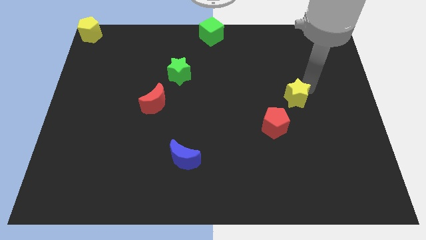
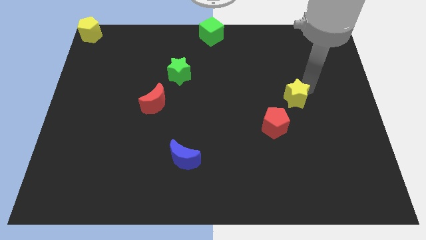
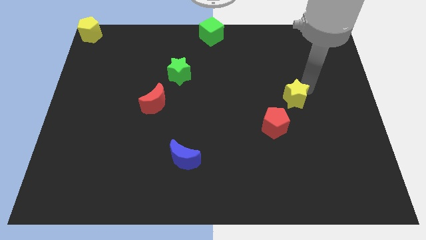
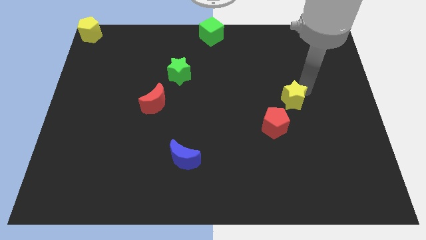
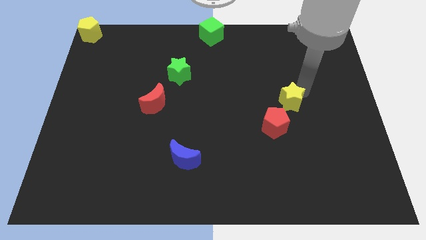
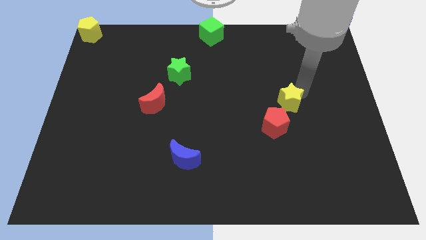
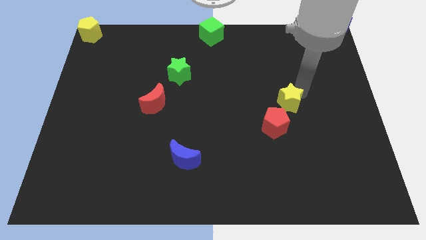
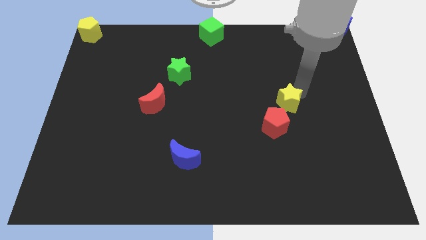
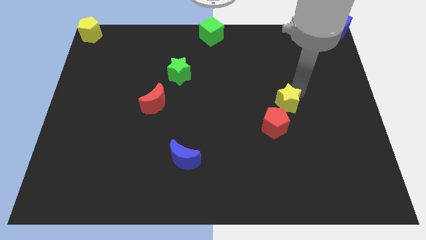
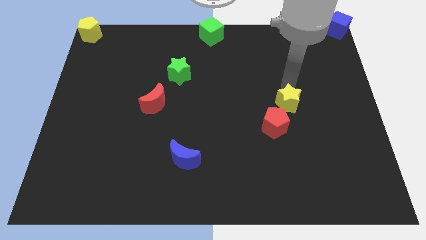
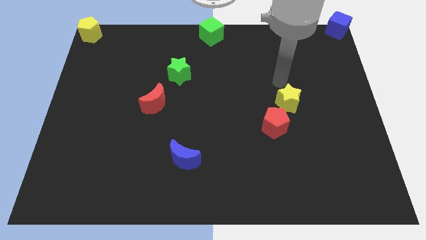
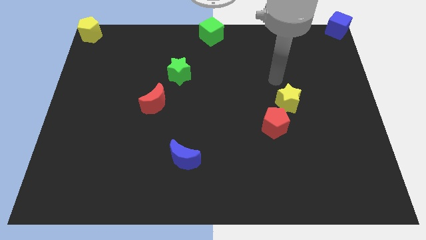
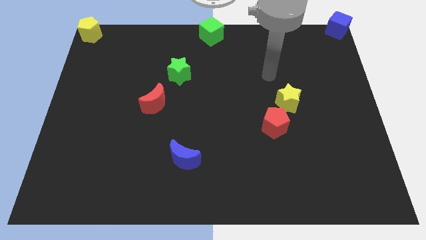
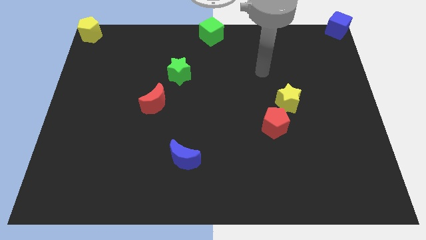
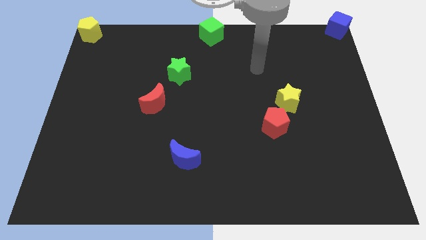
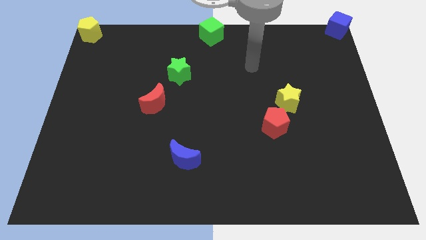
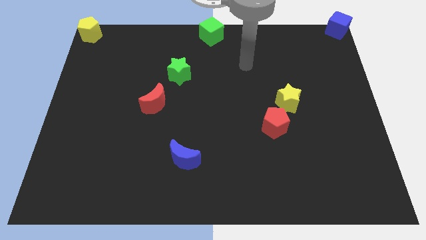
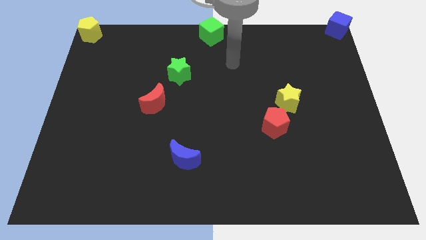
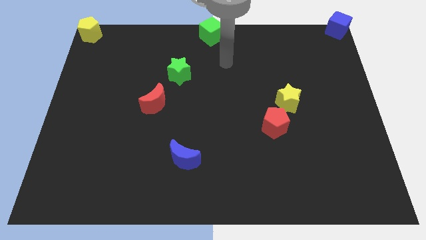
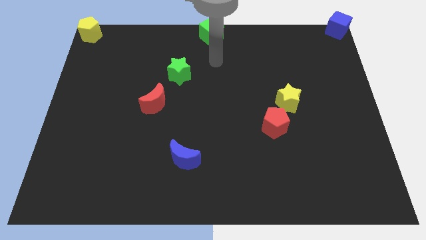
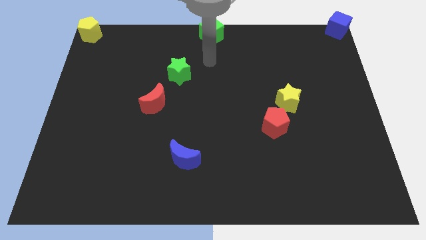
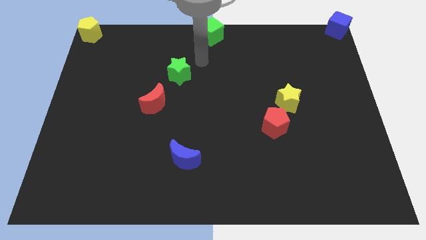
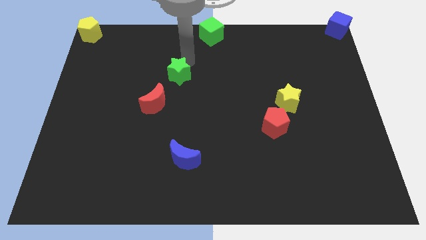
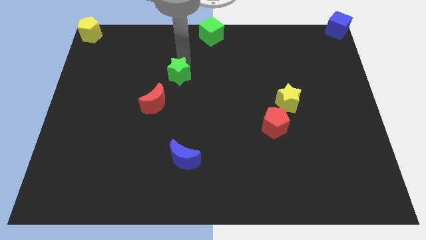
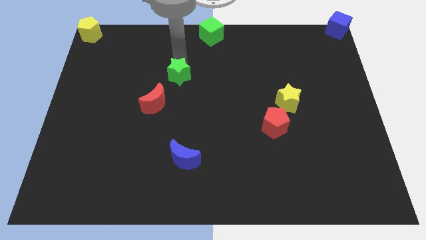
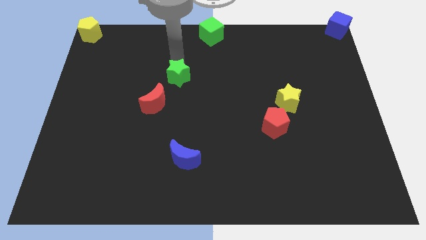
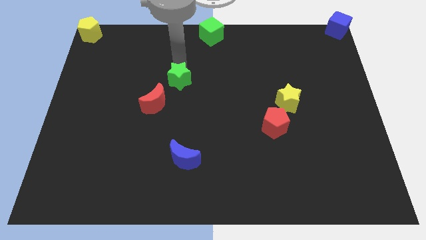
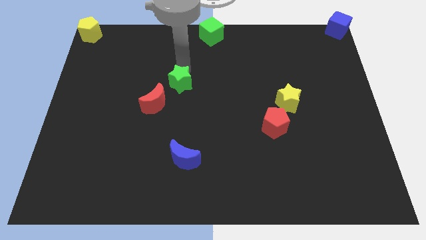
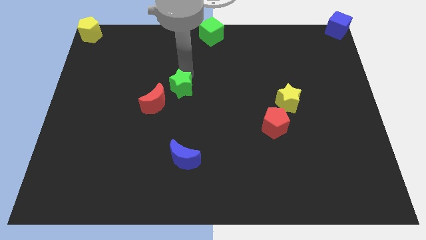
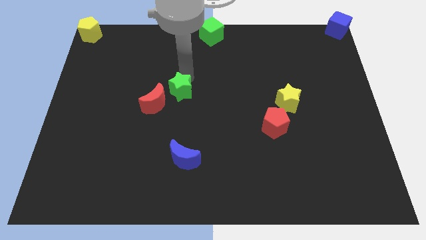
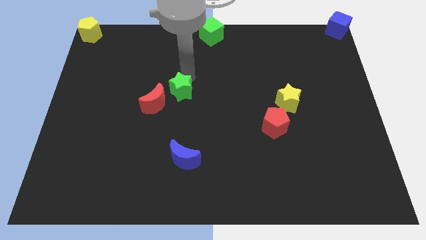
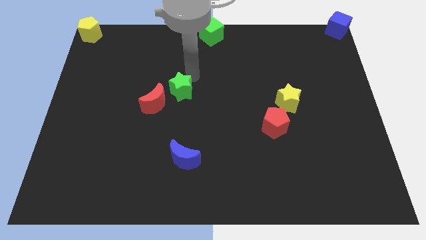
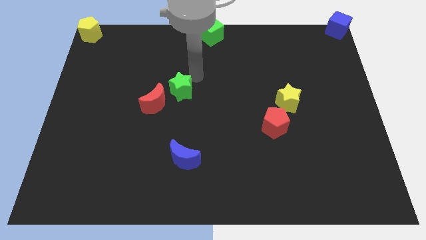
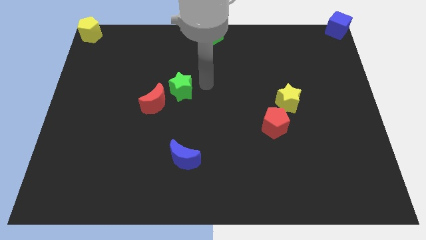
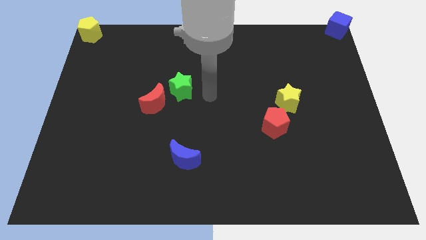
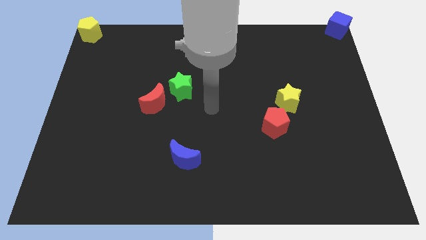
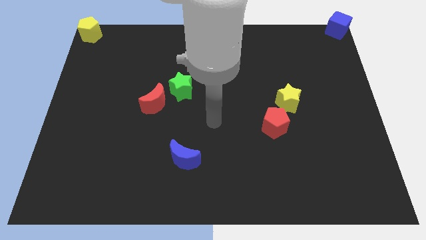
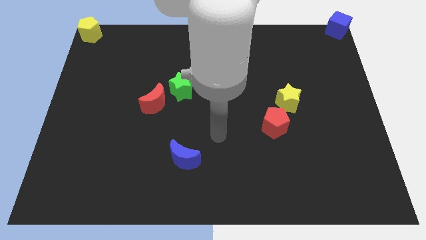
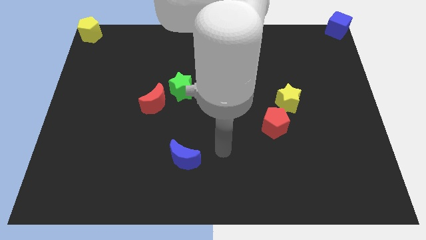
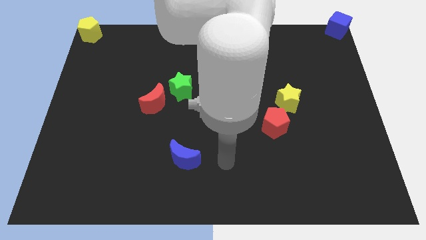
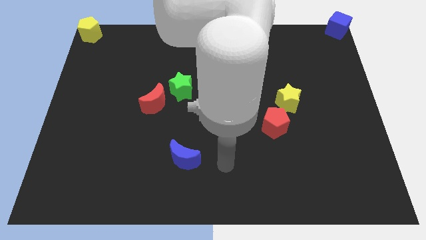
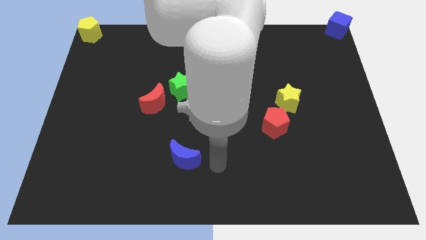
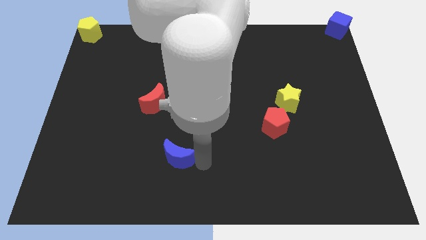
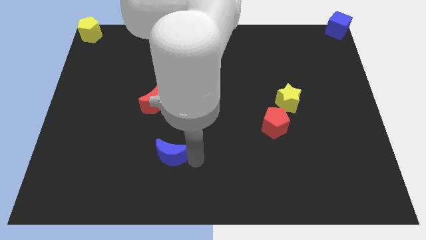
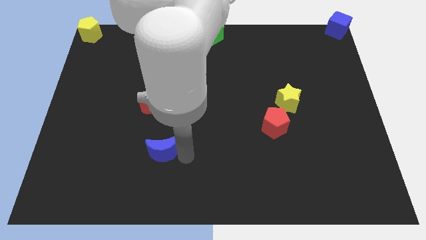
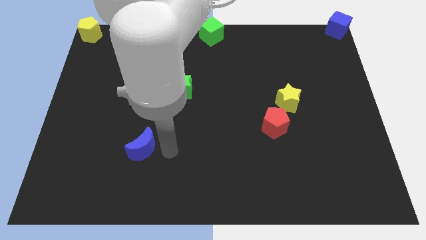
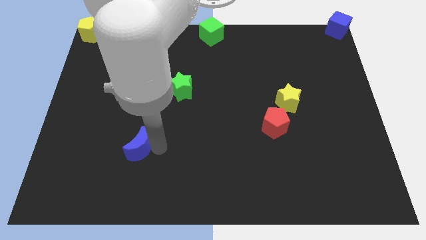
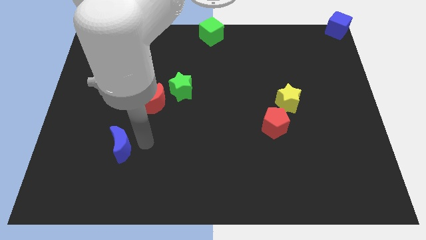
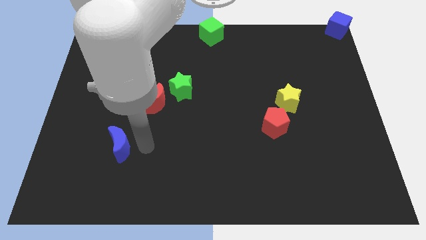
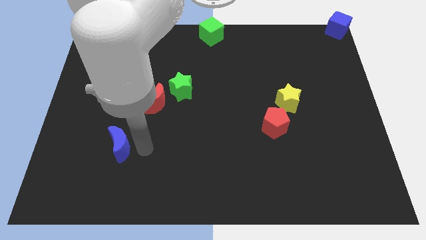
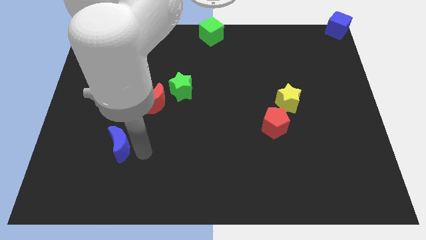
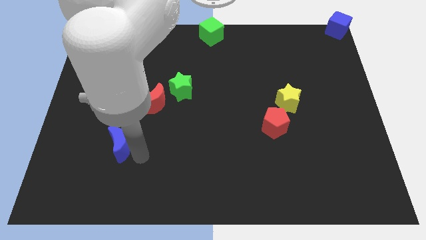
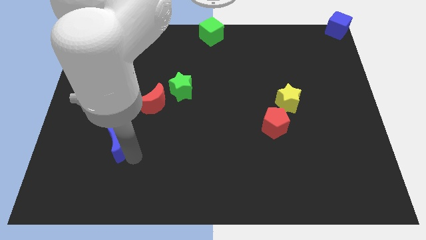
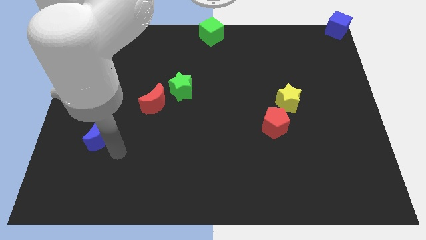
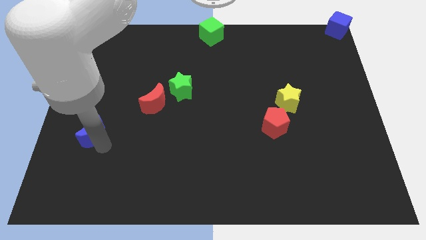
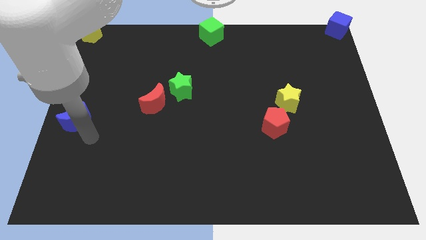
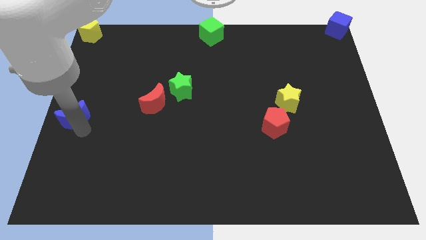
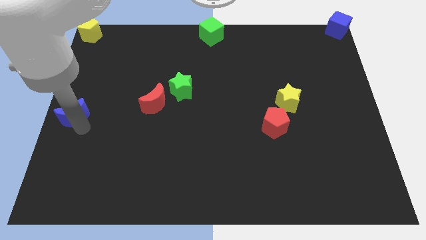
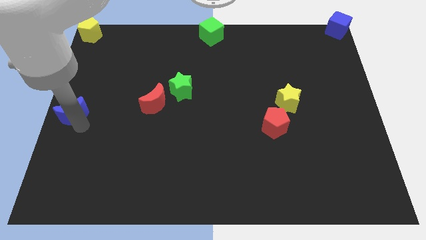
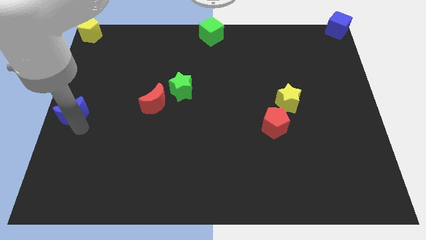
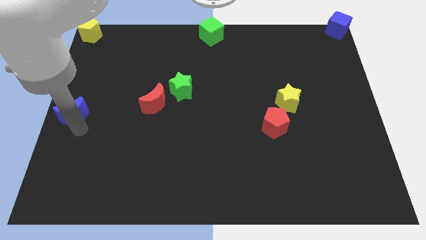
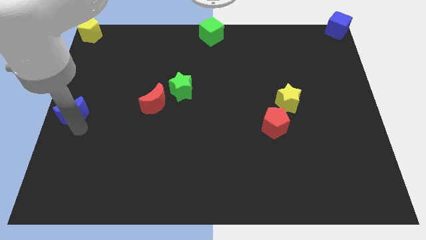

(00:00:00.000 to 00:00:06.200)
place the green star to right side of the red moon

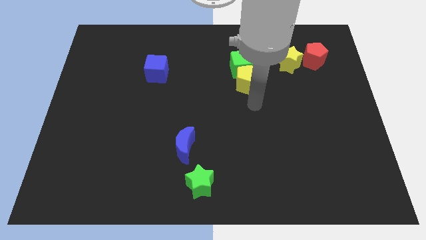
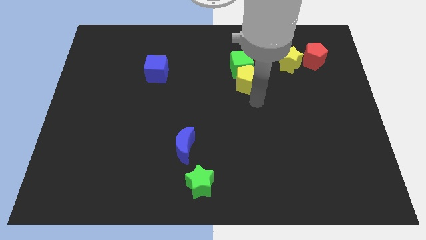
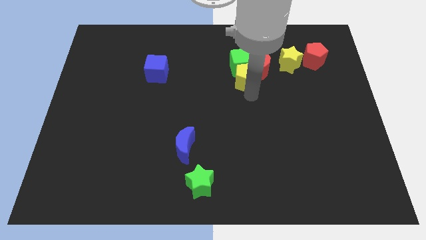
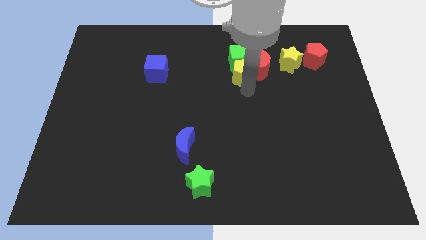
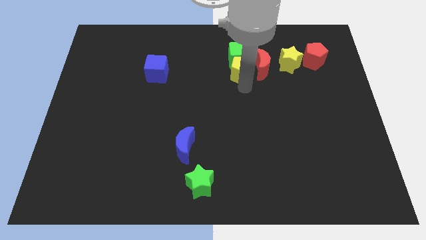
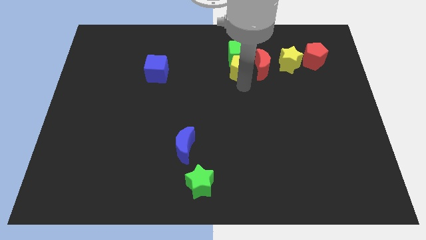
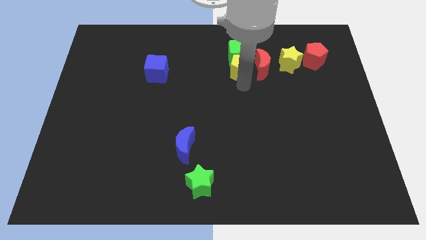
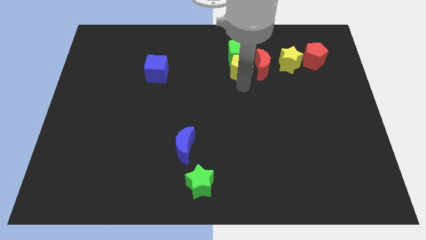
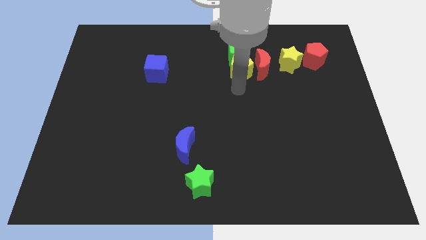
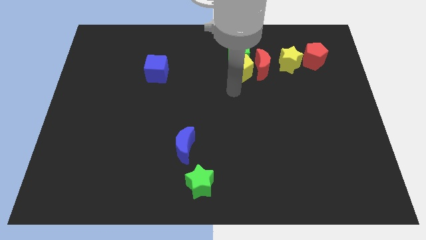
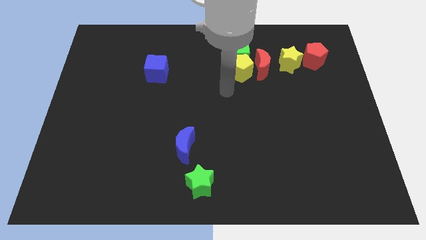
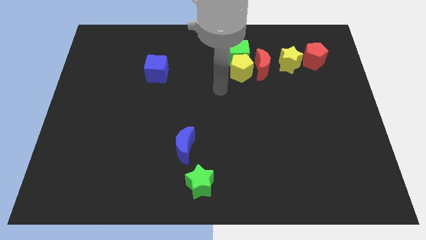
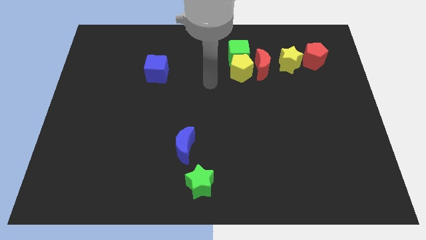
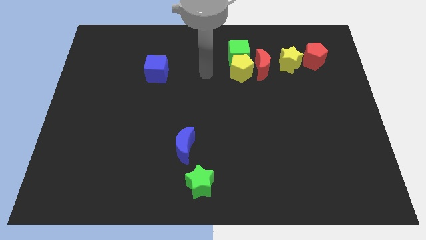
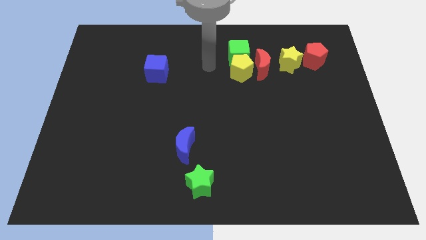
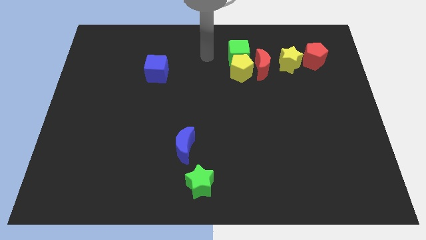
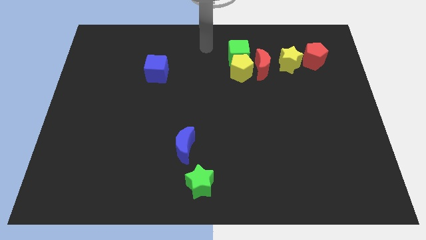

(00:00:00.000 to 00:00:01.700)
place the green cube to the top left of the red moon

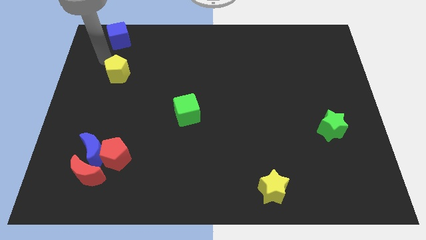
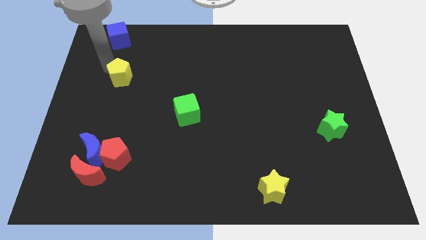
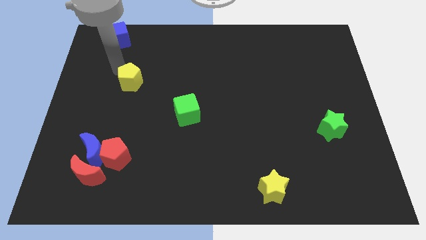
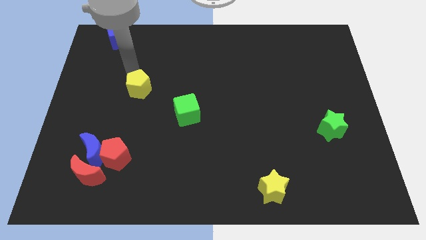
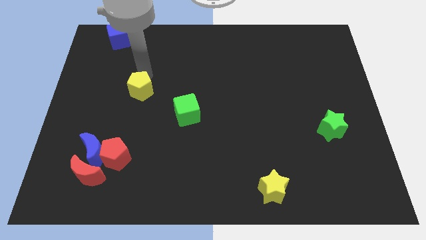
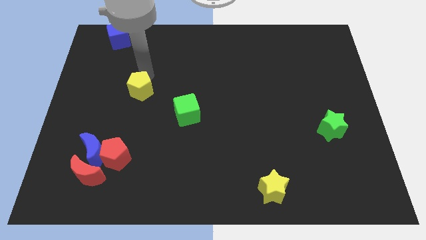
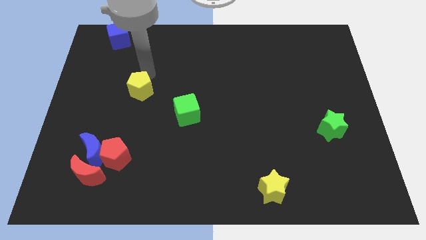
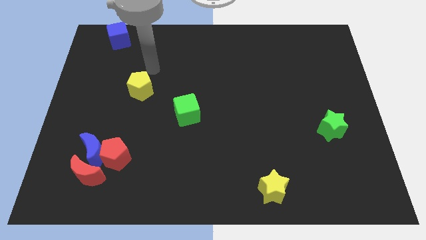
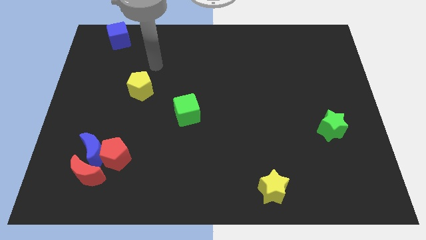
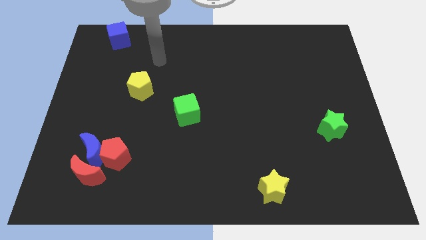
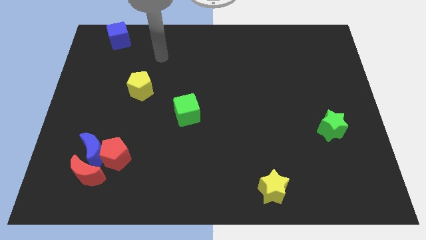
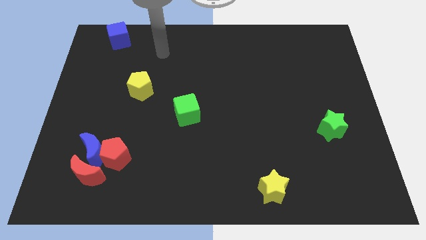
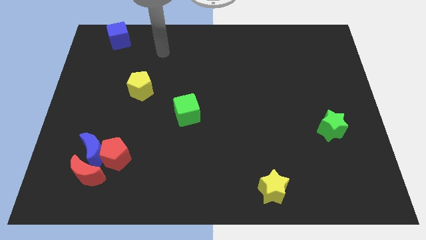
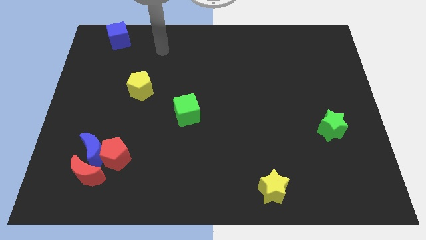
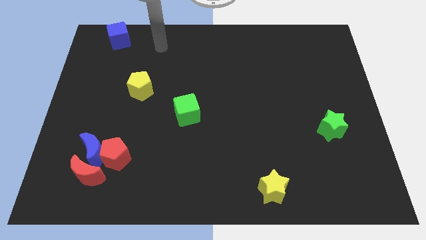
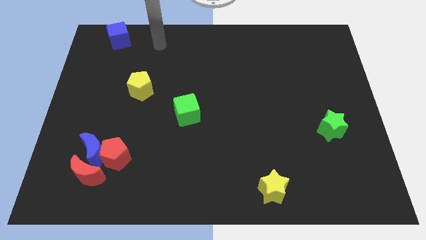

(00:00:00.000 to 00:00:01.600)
push the yellow pentagon diagonally on the top left side of the green cube
